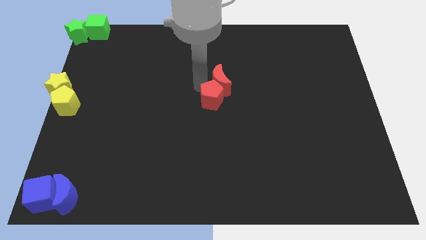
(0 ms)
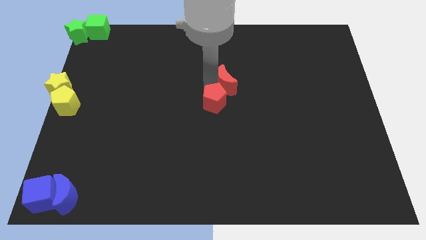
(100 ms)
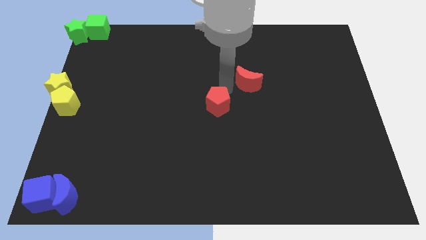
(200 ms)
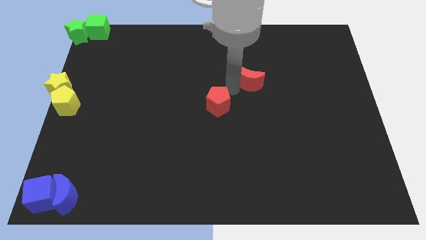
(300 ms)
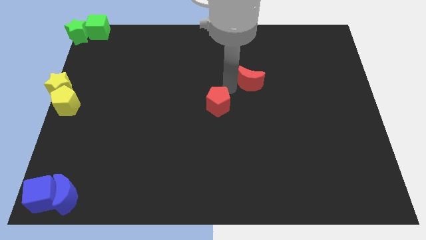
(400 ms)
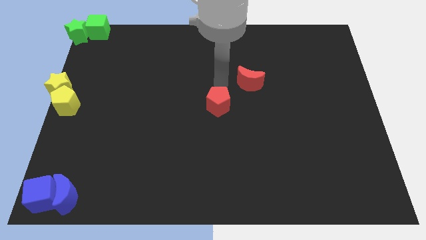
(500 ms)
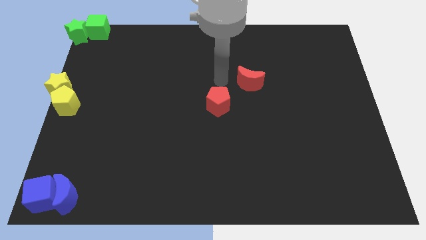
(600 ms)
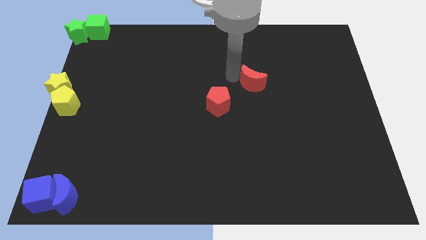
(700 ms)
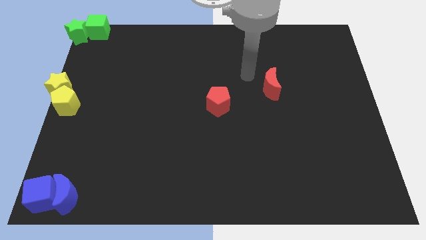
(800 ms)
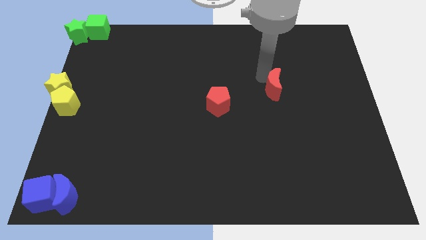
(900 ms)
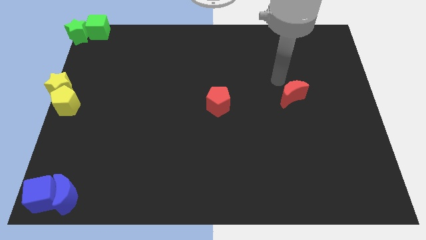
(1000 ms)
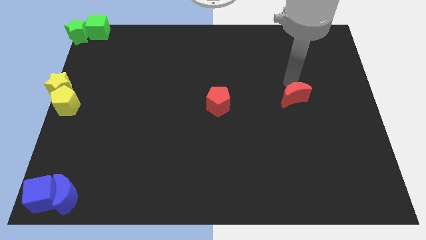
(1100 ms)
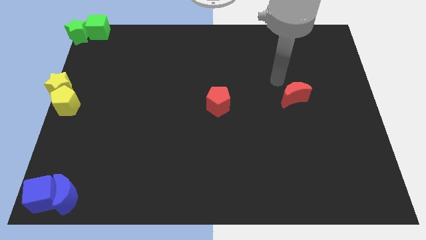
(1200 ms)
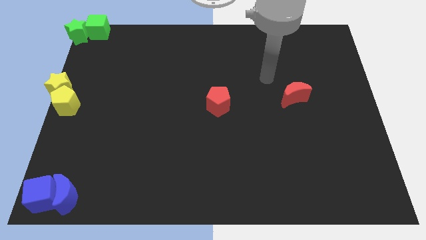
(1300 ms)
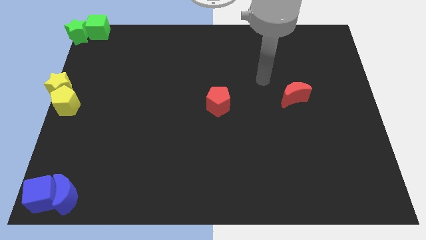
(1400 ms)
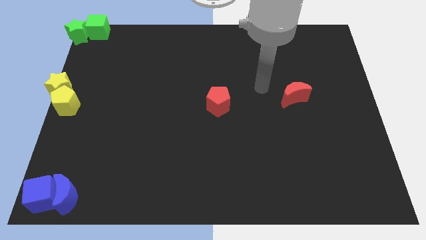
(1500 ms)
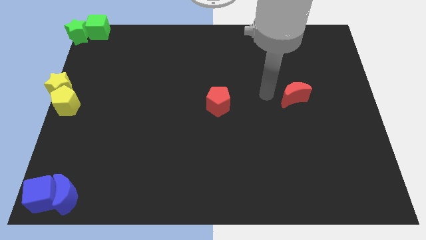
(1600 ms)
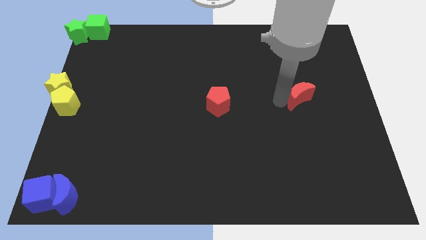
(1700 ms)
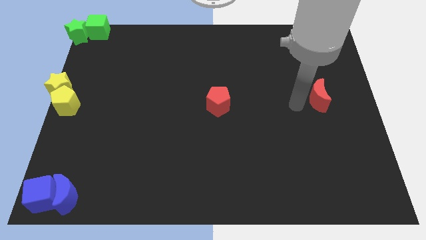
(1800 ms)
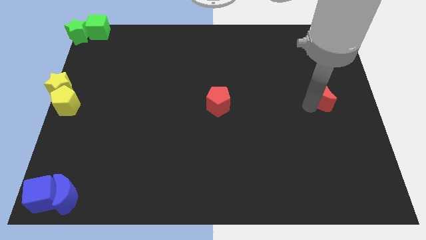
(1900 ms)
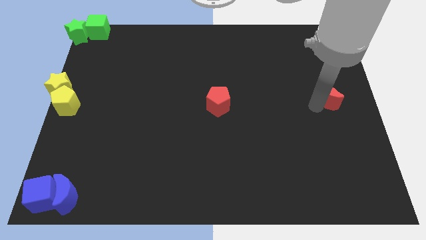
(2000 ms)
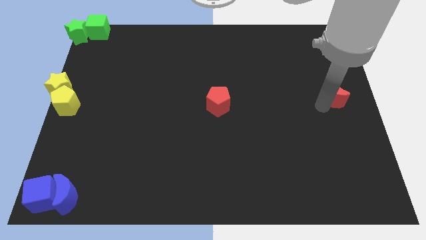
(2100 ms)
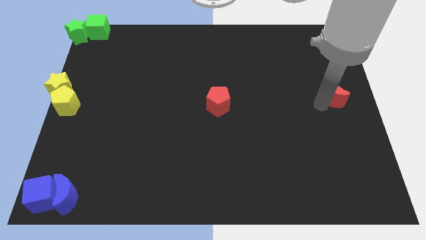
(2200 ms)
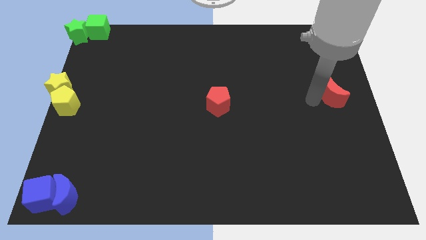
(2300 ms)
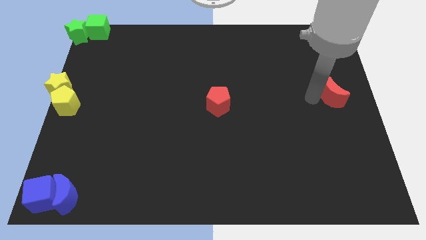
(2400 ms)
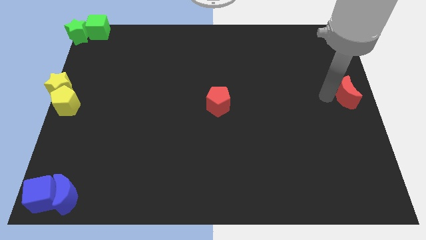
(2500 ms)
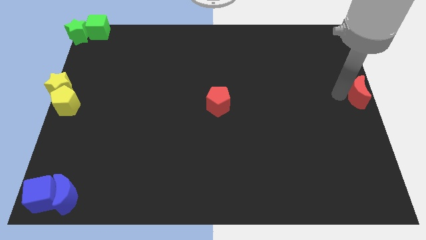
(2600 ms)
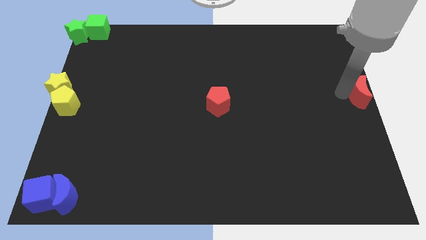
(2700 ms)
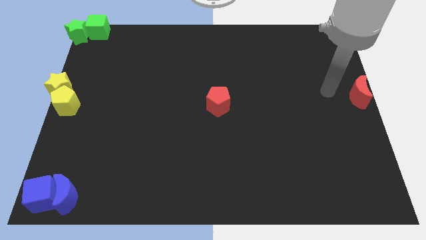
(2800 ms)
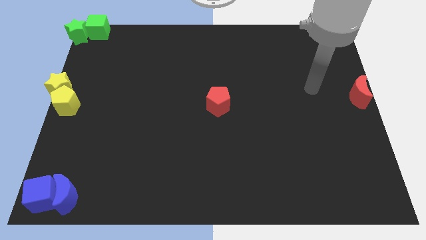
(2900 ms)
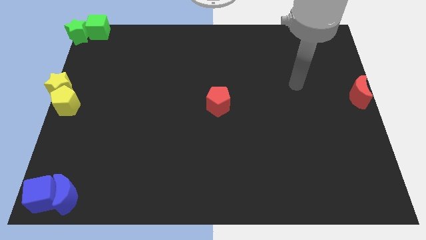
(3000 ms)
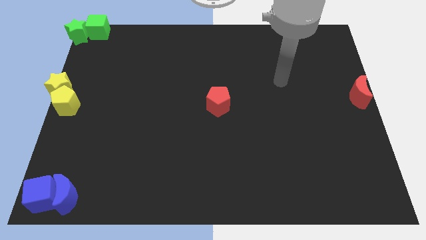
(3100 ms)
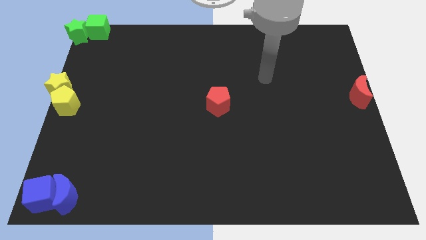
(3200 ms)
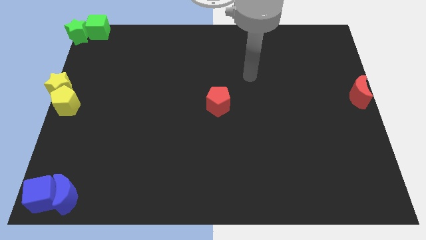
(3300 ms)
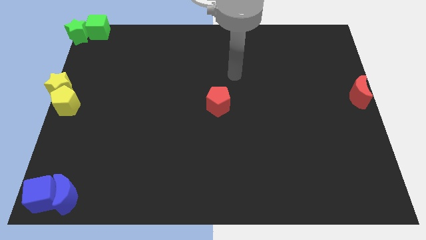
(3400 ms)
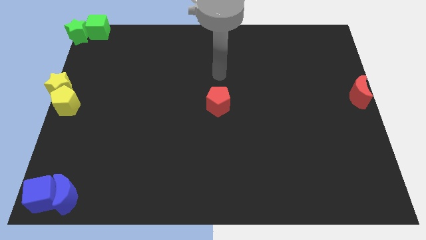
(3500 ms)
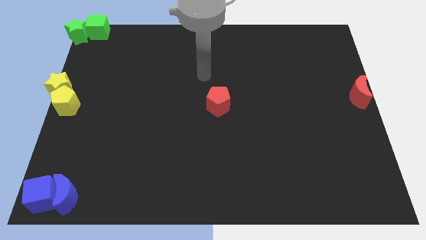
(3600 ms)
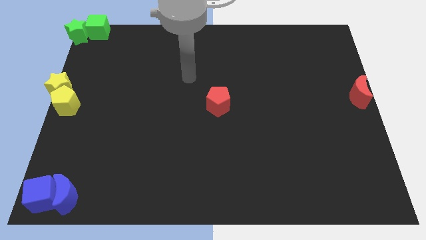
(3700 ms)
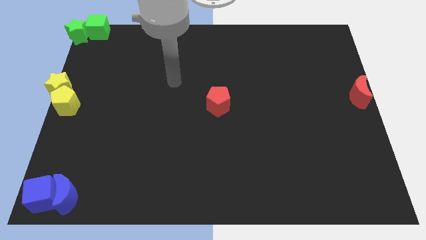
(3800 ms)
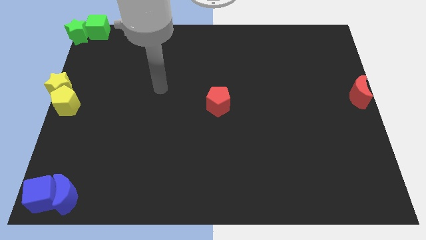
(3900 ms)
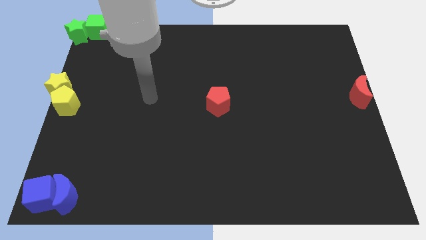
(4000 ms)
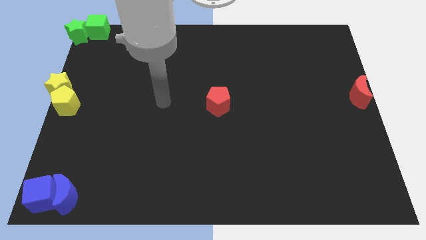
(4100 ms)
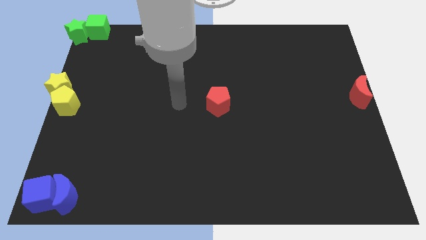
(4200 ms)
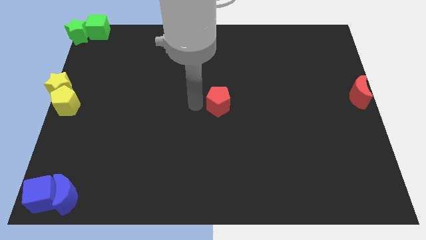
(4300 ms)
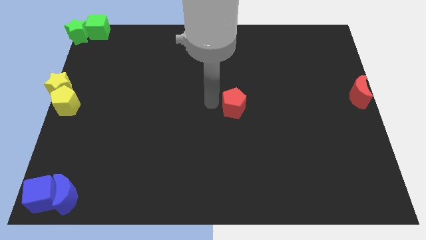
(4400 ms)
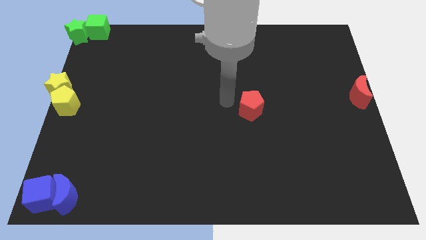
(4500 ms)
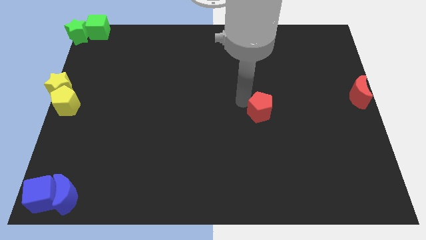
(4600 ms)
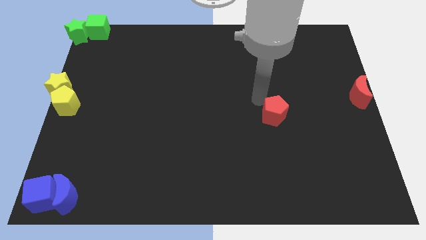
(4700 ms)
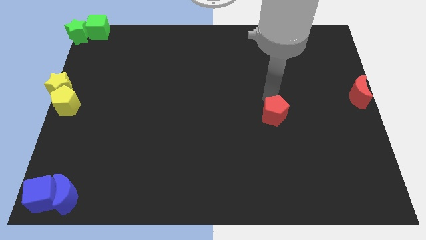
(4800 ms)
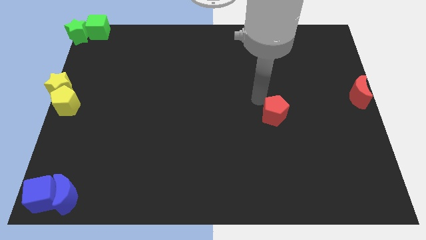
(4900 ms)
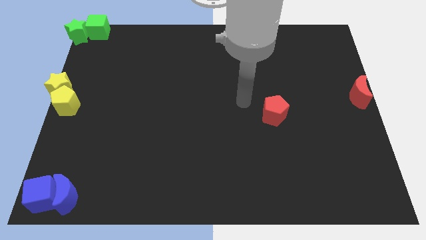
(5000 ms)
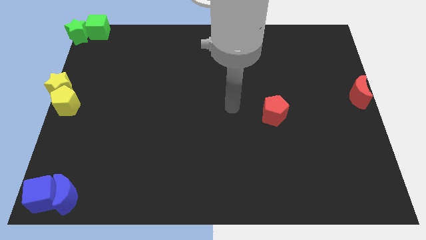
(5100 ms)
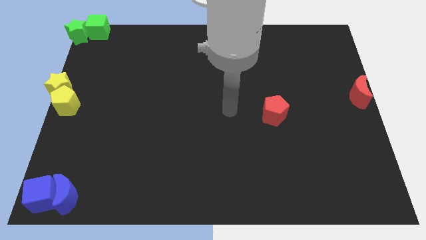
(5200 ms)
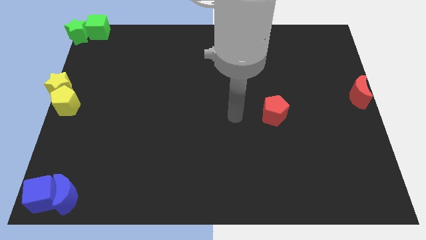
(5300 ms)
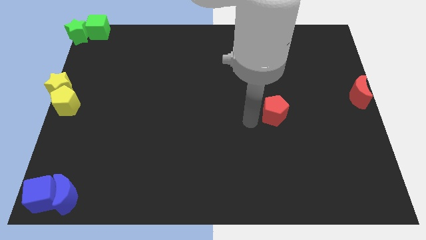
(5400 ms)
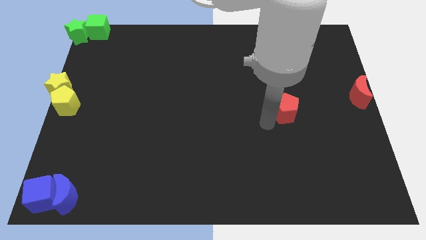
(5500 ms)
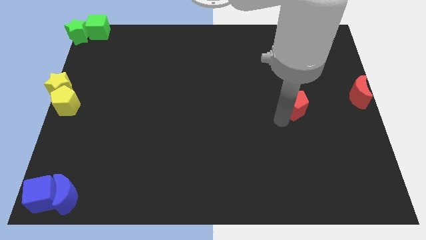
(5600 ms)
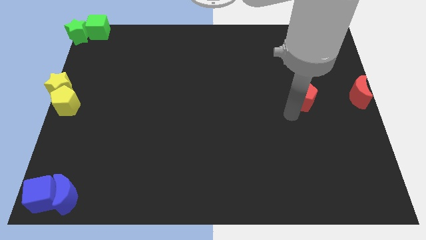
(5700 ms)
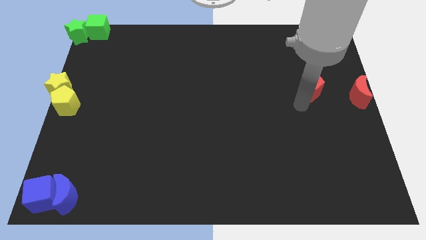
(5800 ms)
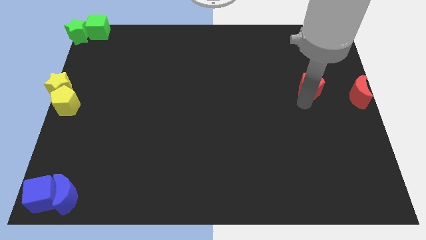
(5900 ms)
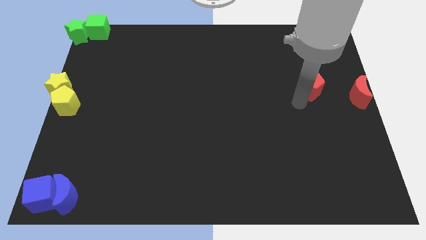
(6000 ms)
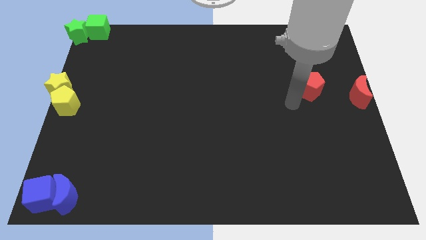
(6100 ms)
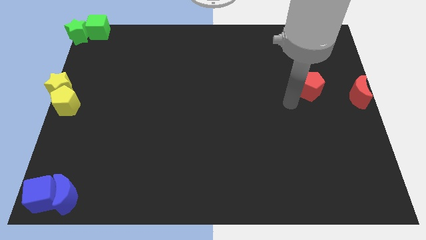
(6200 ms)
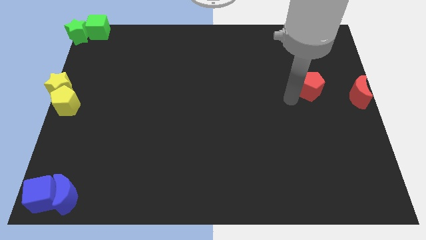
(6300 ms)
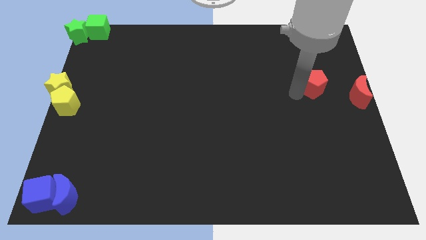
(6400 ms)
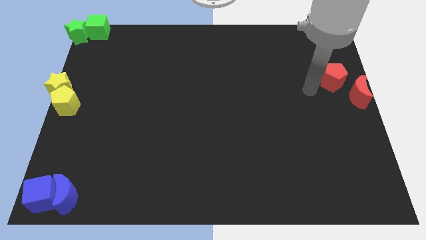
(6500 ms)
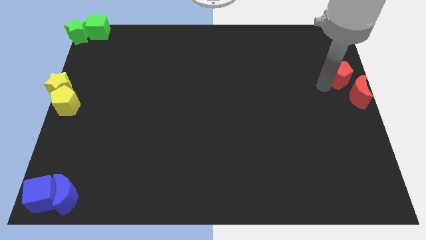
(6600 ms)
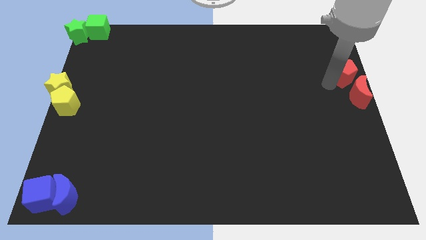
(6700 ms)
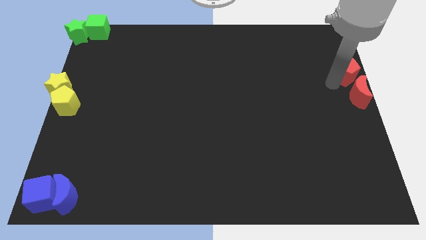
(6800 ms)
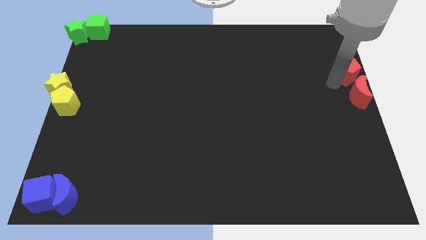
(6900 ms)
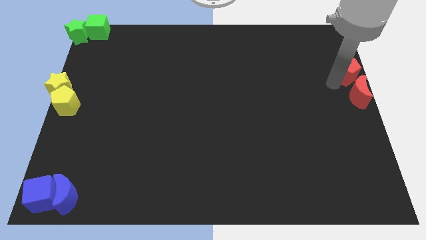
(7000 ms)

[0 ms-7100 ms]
slide the red blocks to the right side of the table

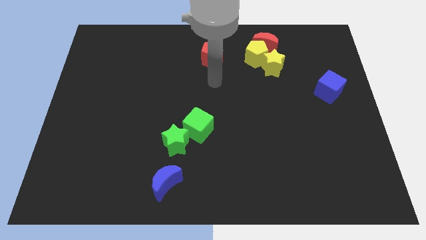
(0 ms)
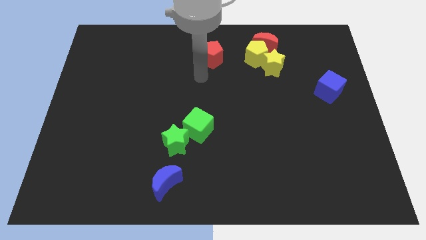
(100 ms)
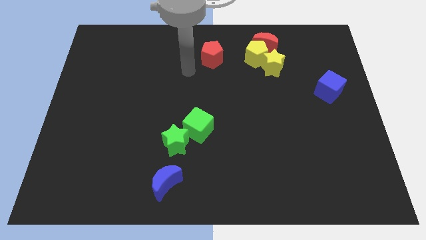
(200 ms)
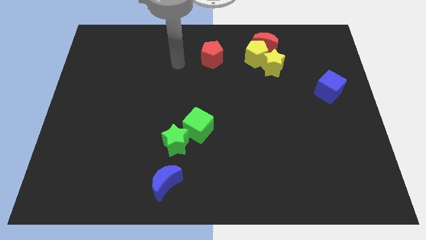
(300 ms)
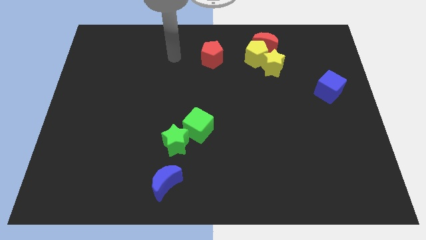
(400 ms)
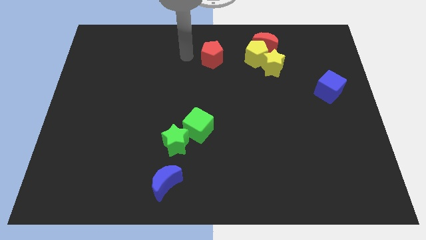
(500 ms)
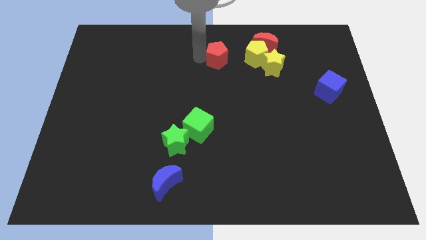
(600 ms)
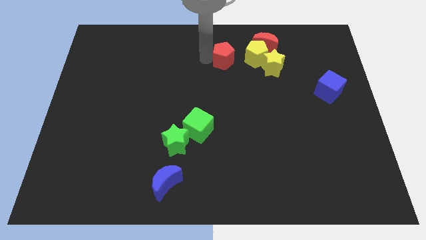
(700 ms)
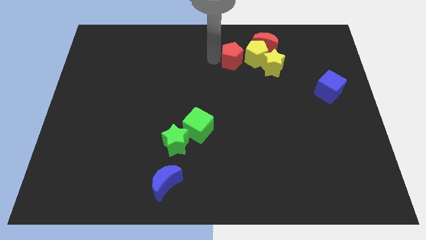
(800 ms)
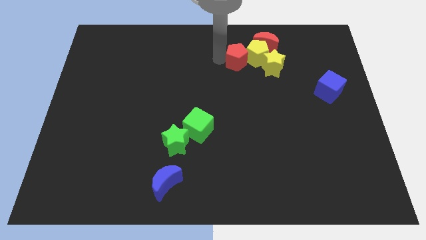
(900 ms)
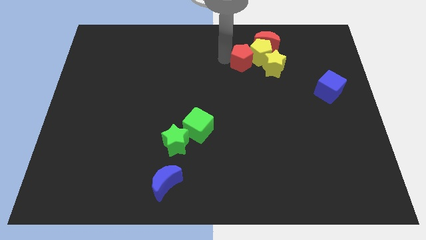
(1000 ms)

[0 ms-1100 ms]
push red pentagon towards yellow pentagon

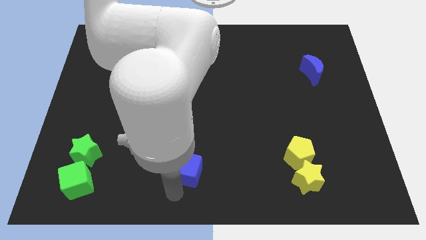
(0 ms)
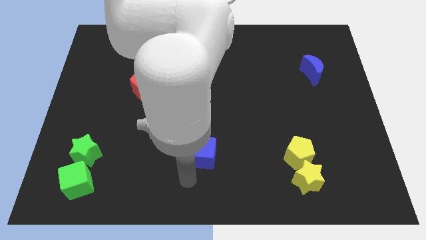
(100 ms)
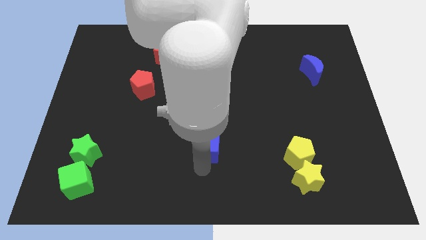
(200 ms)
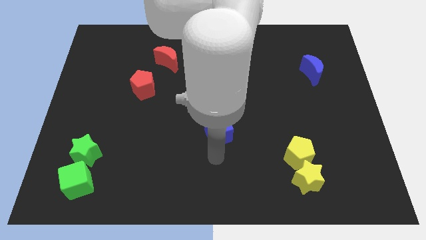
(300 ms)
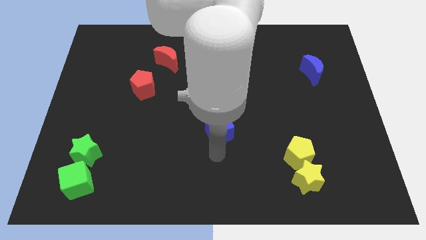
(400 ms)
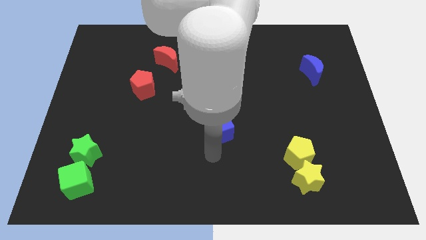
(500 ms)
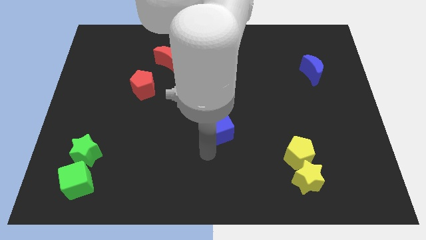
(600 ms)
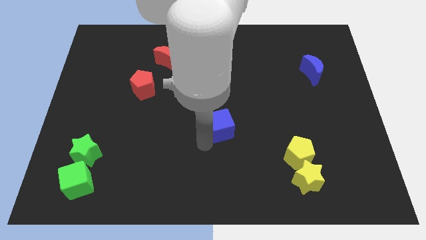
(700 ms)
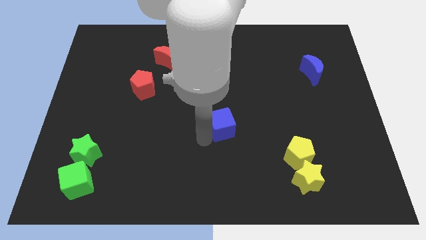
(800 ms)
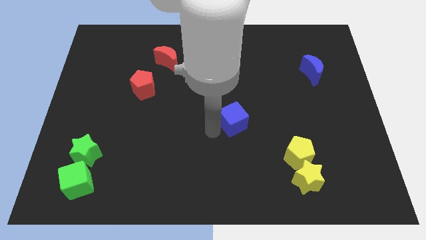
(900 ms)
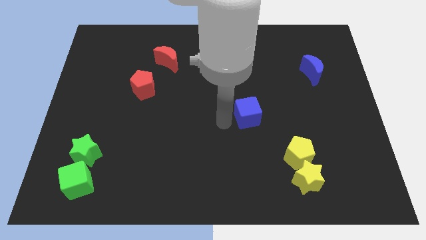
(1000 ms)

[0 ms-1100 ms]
place blue cube at center
